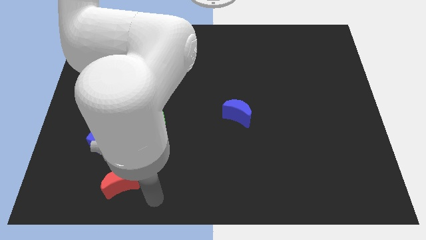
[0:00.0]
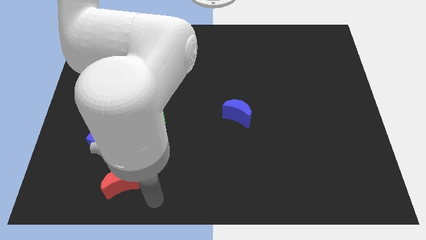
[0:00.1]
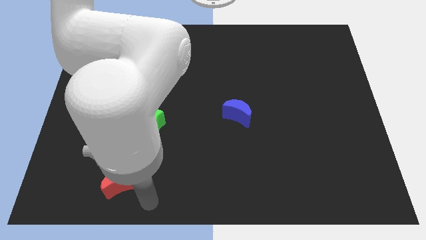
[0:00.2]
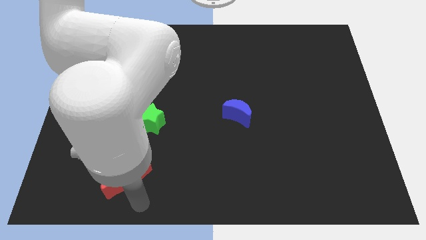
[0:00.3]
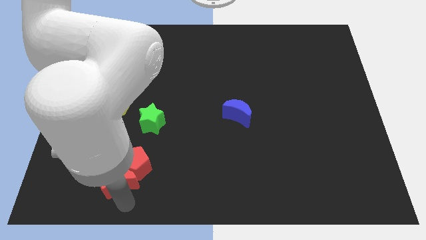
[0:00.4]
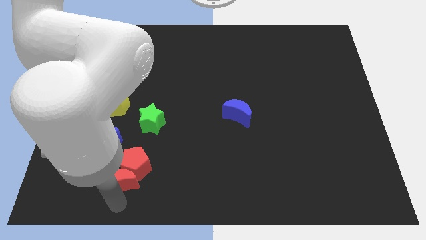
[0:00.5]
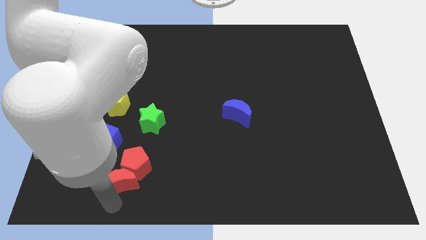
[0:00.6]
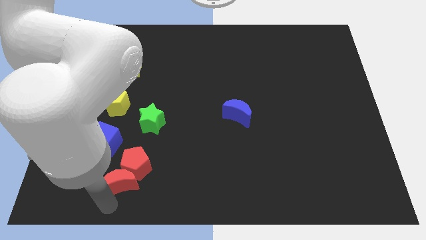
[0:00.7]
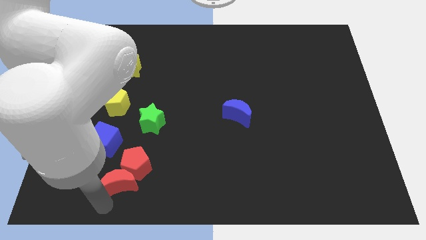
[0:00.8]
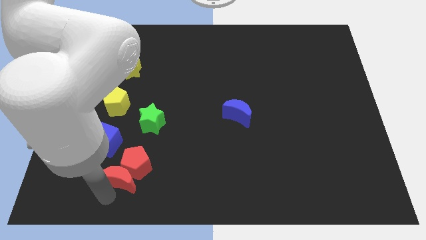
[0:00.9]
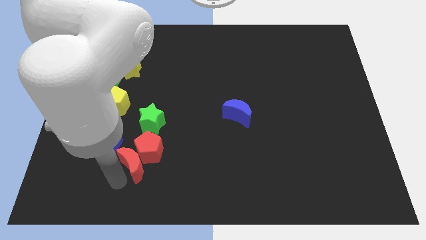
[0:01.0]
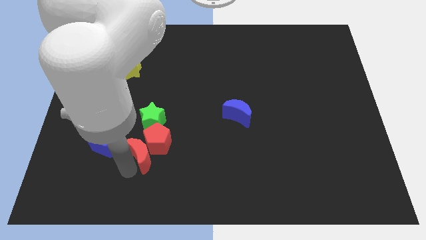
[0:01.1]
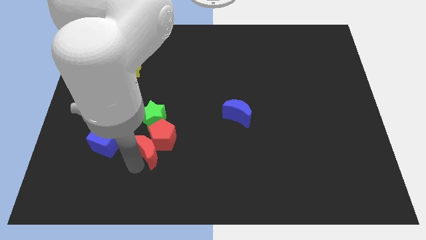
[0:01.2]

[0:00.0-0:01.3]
slide the red crescent into the red pentagon

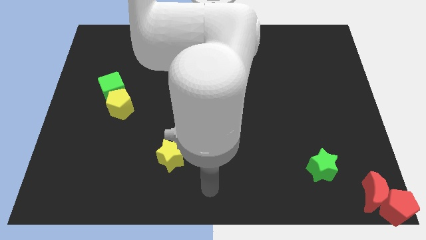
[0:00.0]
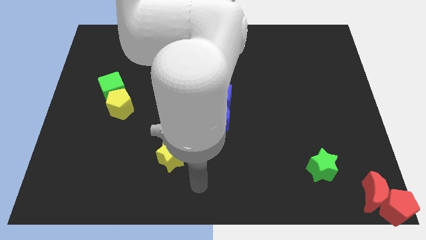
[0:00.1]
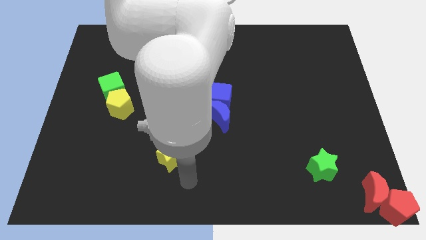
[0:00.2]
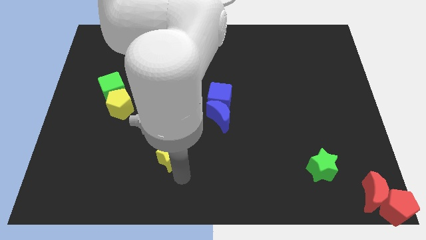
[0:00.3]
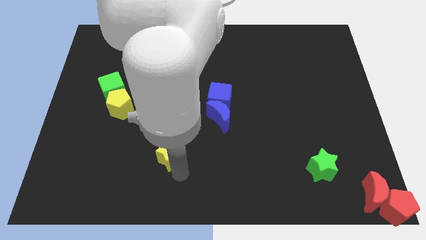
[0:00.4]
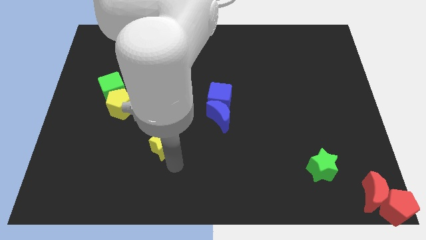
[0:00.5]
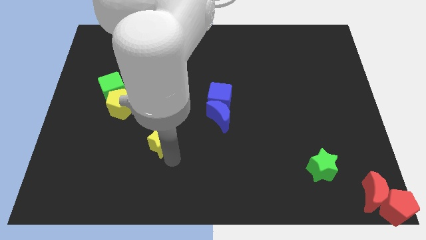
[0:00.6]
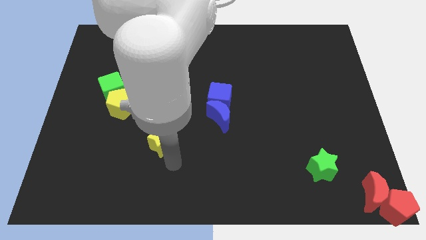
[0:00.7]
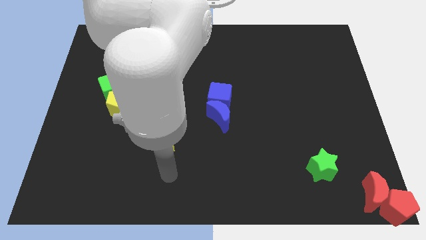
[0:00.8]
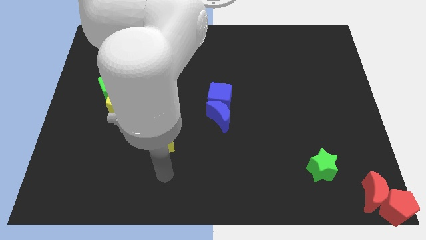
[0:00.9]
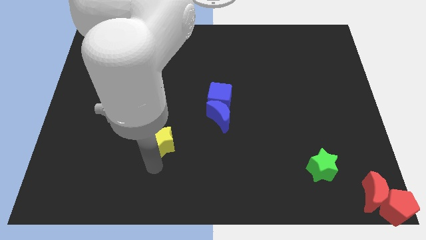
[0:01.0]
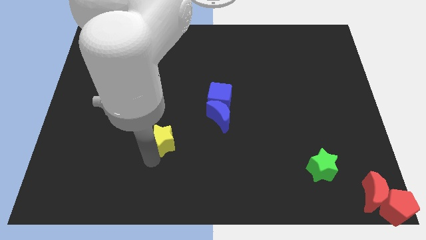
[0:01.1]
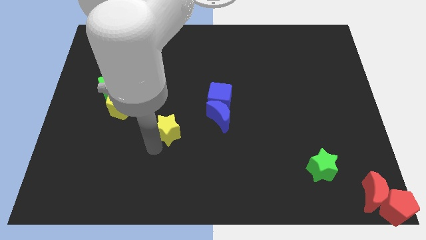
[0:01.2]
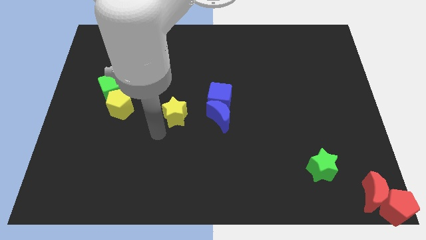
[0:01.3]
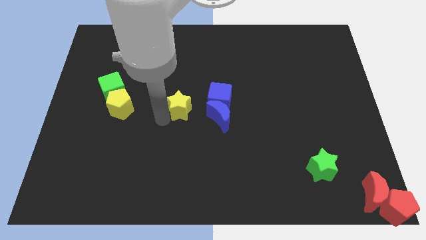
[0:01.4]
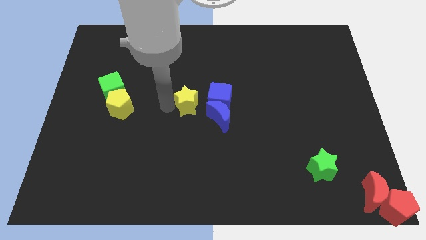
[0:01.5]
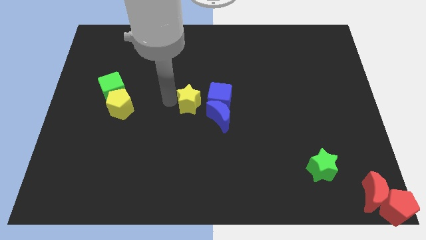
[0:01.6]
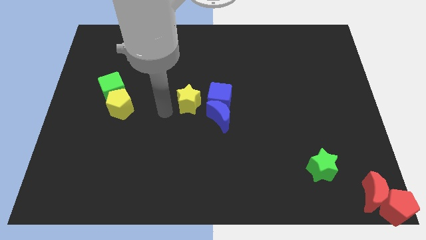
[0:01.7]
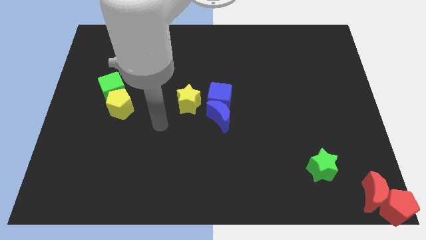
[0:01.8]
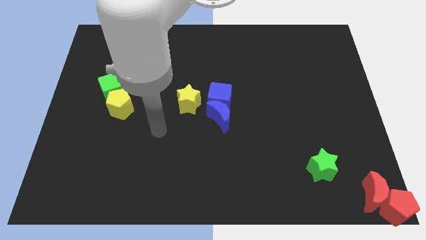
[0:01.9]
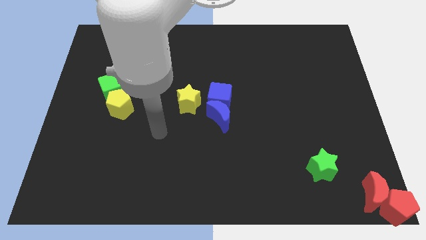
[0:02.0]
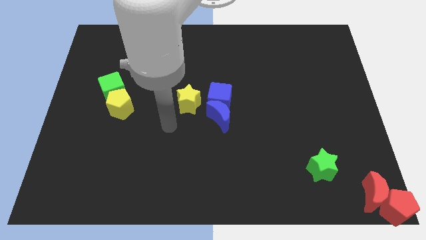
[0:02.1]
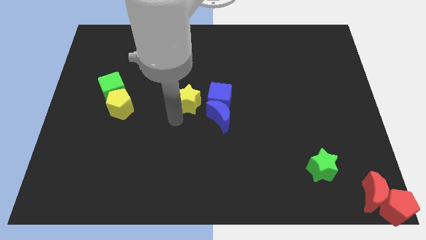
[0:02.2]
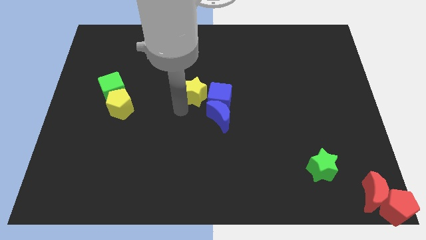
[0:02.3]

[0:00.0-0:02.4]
move yellow star to the left of the blue cube

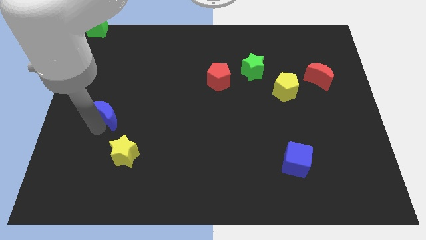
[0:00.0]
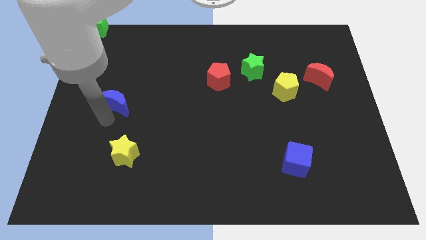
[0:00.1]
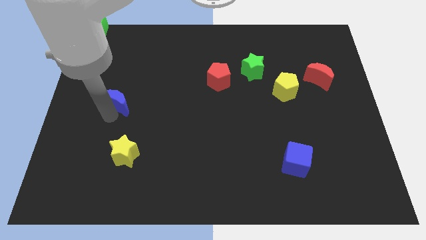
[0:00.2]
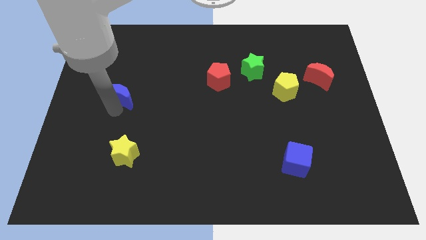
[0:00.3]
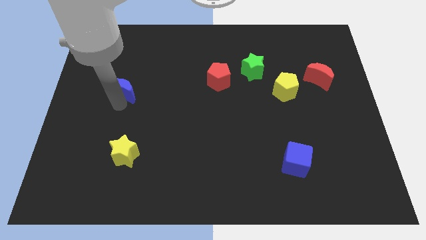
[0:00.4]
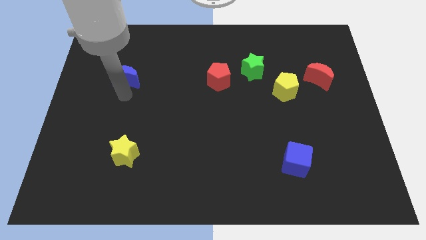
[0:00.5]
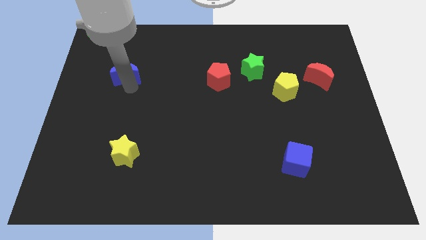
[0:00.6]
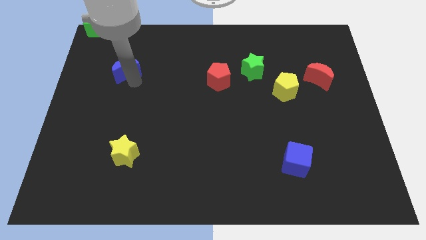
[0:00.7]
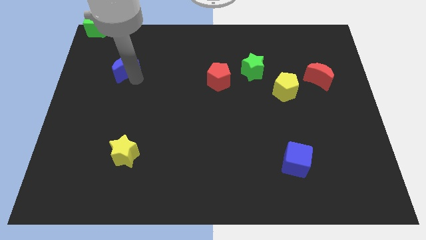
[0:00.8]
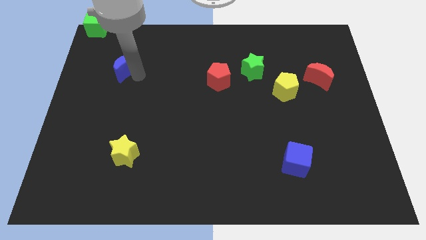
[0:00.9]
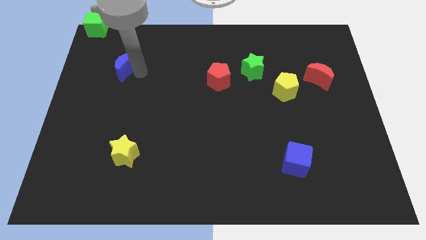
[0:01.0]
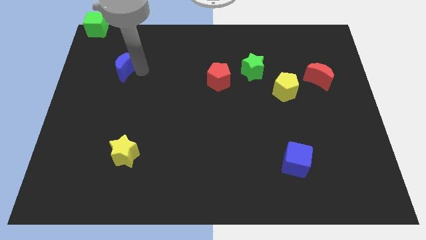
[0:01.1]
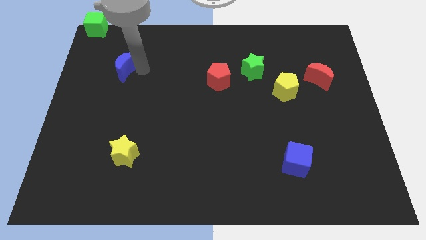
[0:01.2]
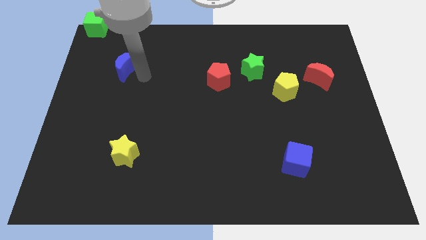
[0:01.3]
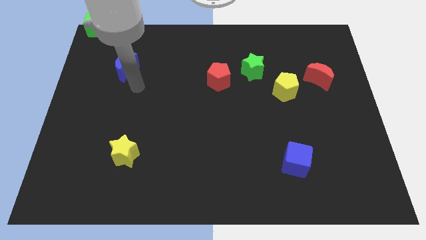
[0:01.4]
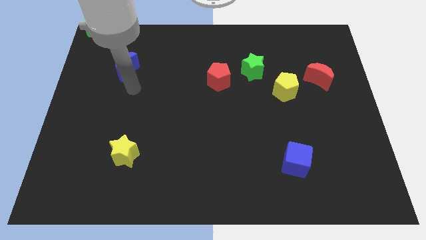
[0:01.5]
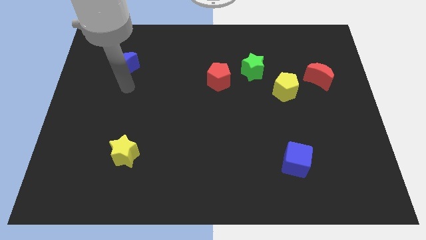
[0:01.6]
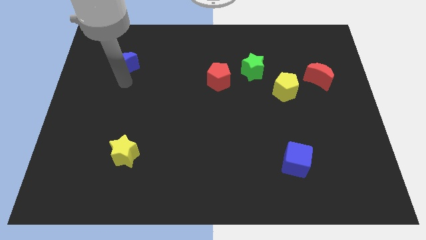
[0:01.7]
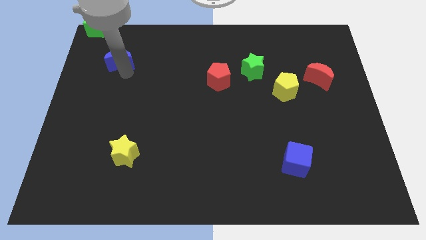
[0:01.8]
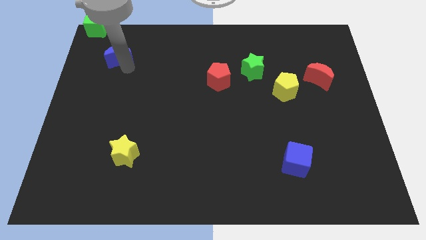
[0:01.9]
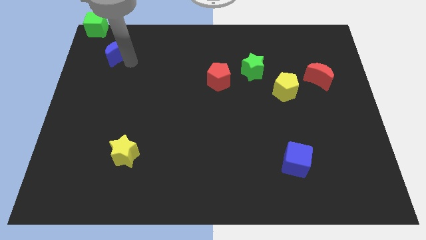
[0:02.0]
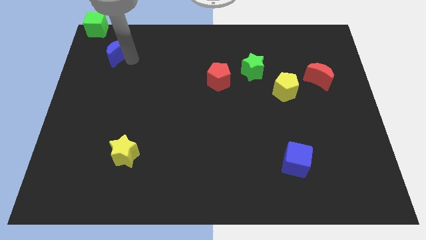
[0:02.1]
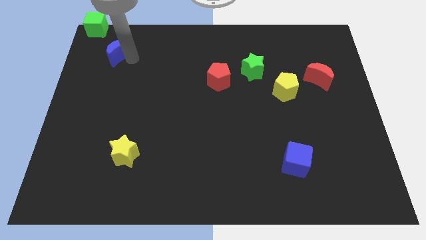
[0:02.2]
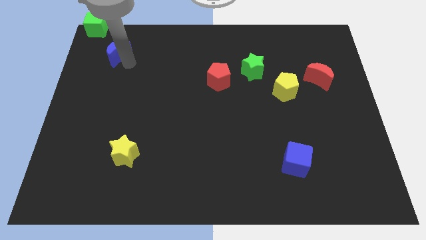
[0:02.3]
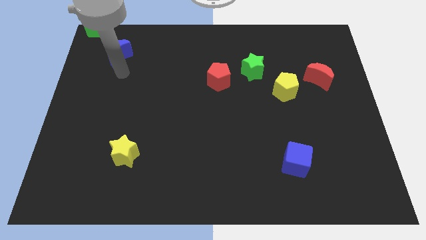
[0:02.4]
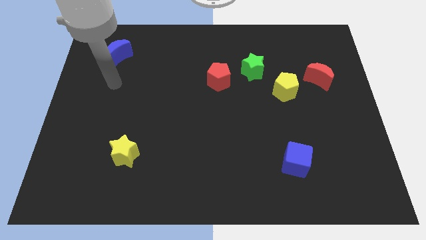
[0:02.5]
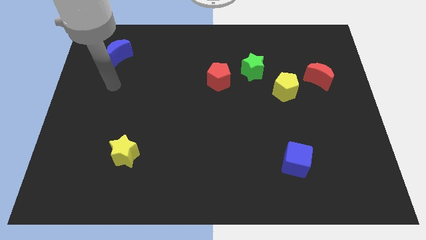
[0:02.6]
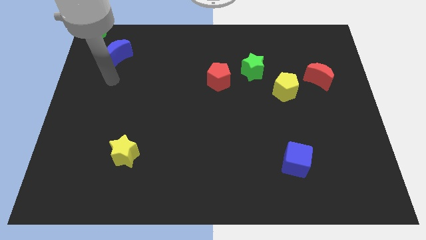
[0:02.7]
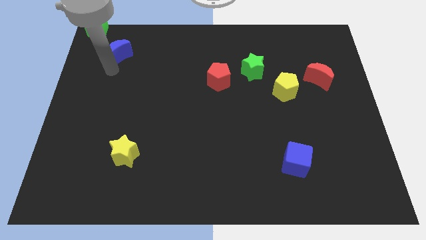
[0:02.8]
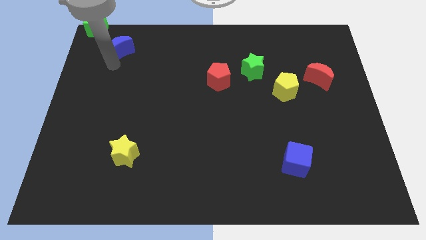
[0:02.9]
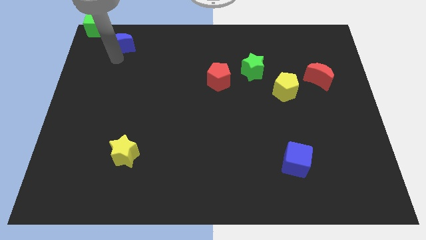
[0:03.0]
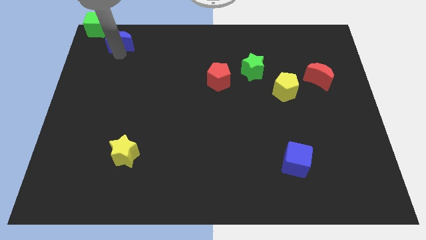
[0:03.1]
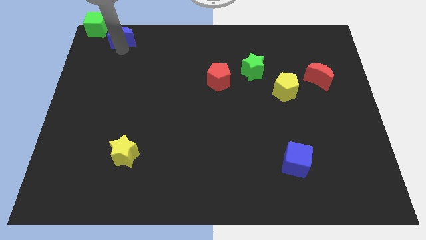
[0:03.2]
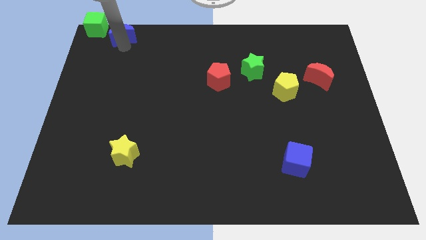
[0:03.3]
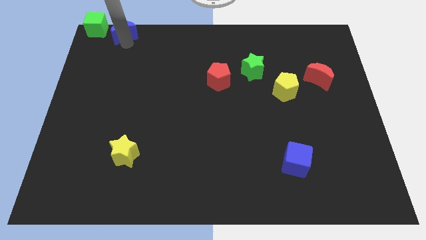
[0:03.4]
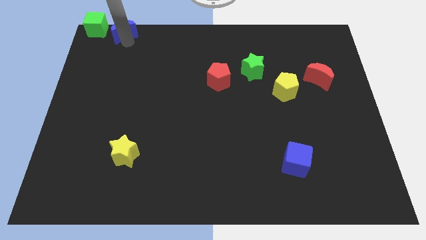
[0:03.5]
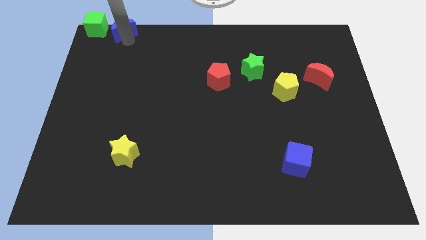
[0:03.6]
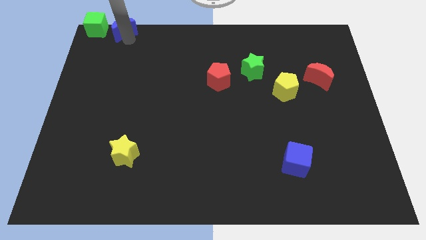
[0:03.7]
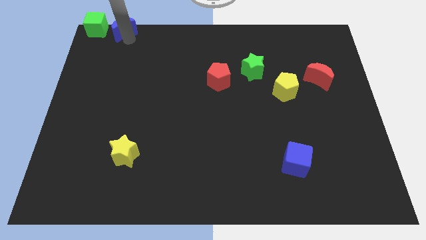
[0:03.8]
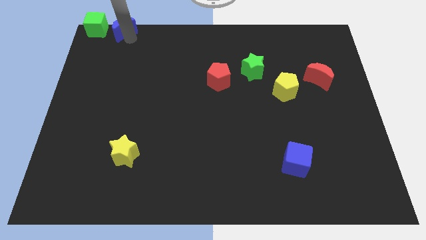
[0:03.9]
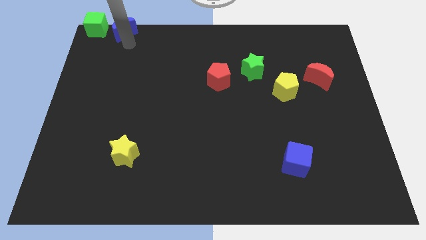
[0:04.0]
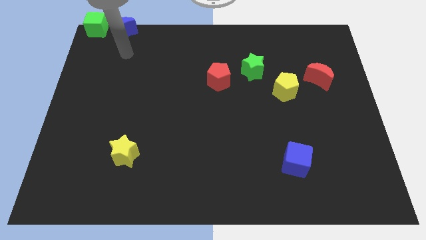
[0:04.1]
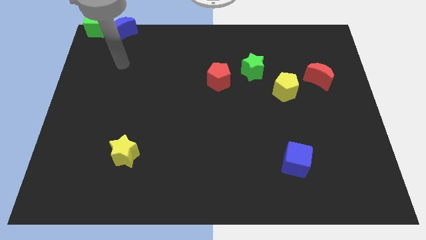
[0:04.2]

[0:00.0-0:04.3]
put the blue crescent on the right side of the green cube

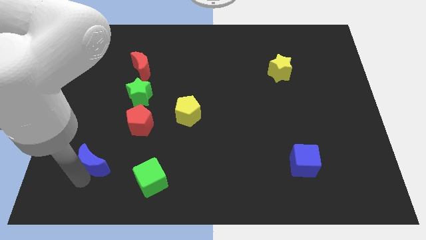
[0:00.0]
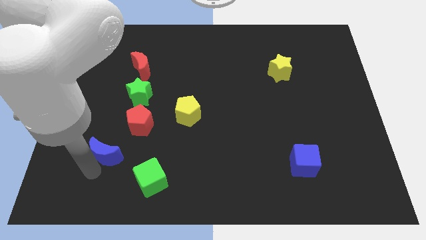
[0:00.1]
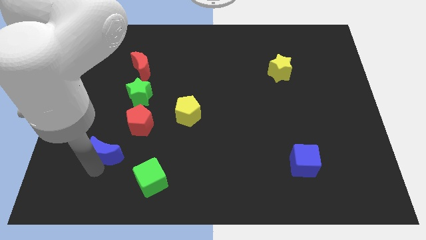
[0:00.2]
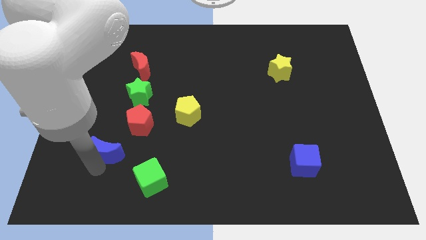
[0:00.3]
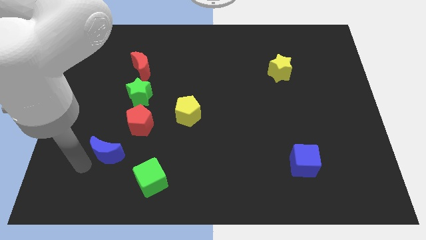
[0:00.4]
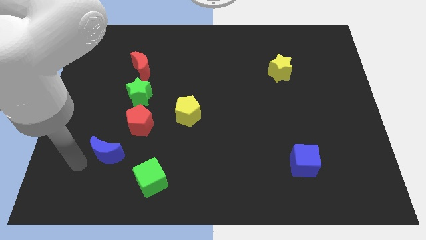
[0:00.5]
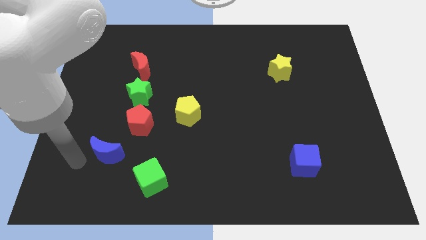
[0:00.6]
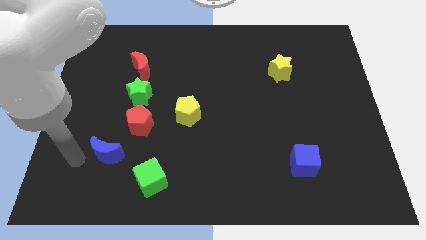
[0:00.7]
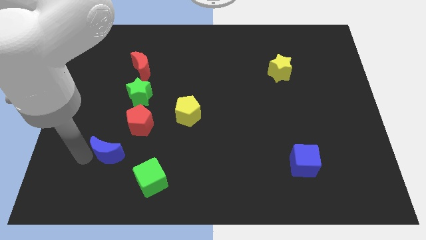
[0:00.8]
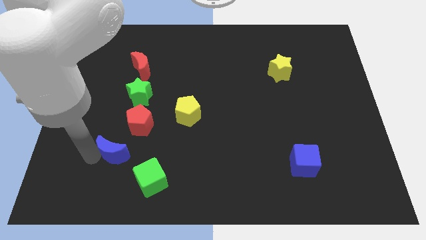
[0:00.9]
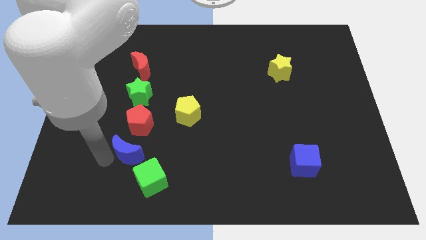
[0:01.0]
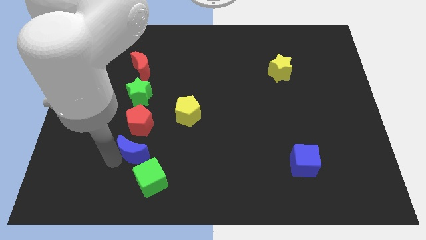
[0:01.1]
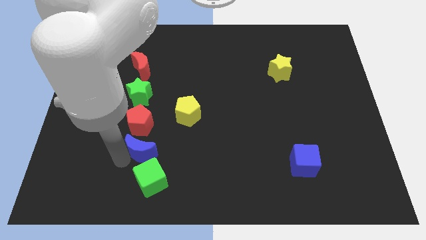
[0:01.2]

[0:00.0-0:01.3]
place blue moon to the top of green cube
